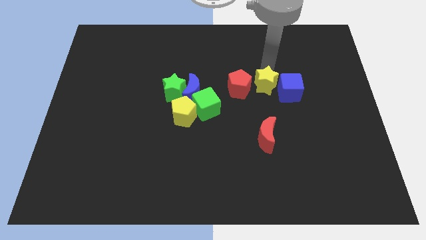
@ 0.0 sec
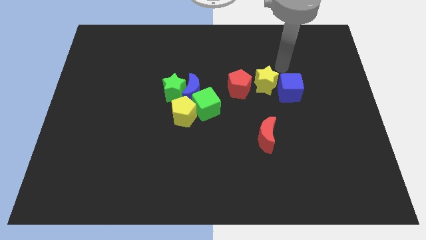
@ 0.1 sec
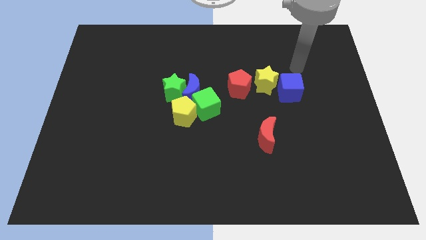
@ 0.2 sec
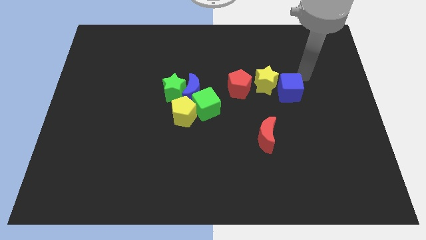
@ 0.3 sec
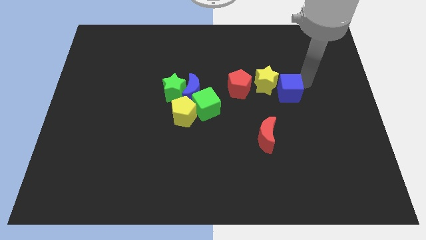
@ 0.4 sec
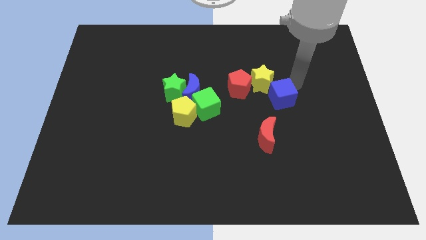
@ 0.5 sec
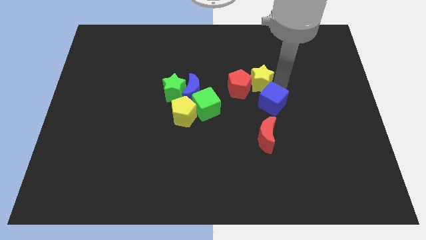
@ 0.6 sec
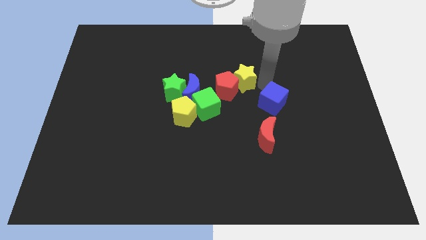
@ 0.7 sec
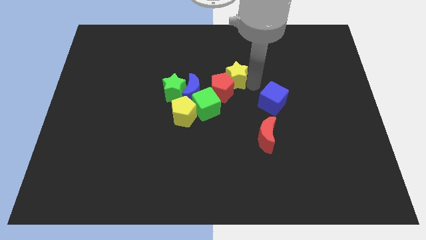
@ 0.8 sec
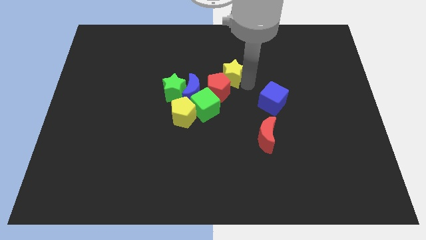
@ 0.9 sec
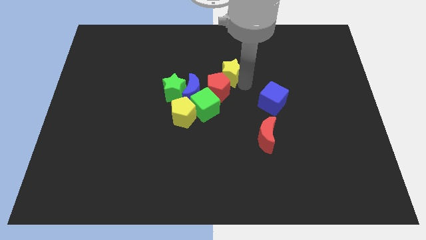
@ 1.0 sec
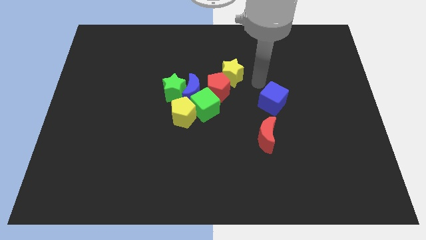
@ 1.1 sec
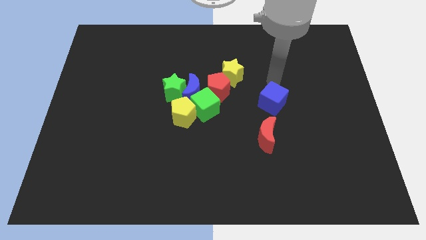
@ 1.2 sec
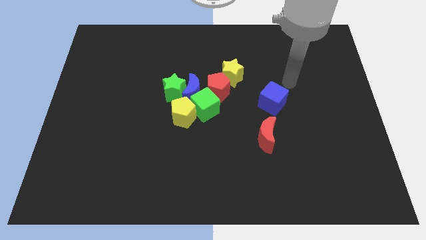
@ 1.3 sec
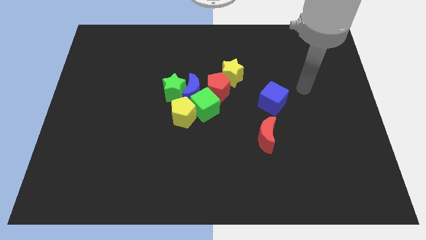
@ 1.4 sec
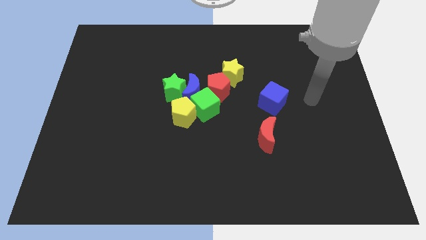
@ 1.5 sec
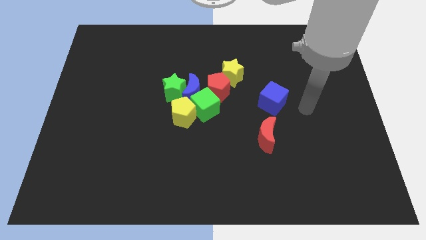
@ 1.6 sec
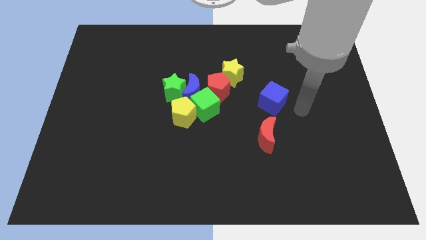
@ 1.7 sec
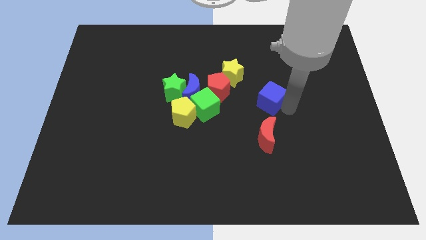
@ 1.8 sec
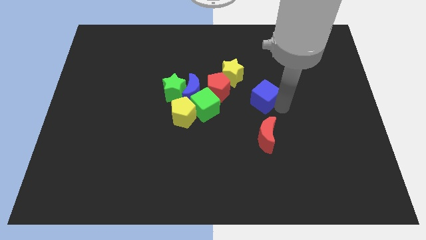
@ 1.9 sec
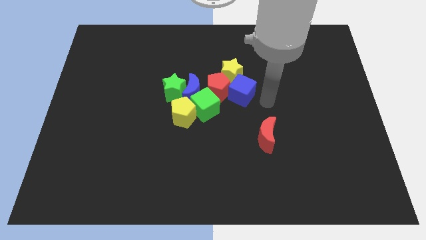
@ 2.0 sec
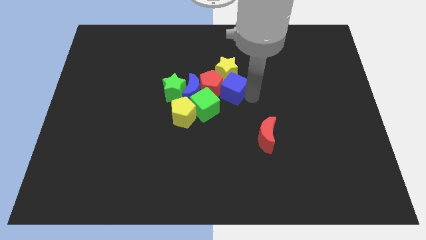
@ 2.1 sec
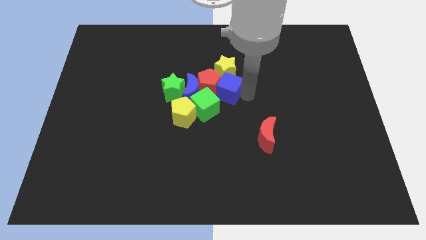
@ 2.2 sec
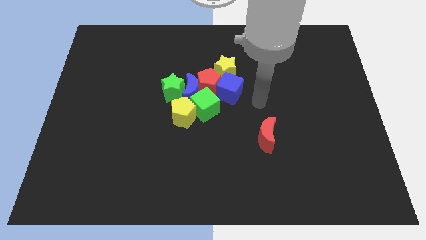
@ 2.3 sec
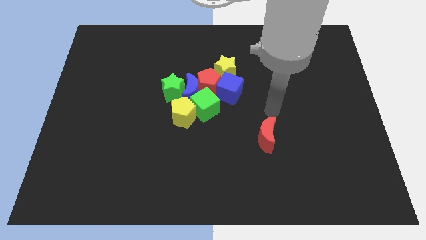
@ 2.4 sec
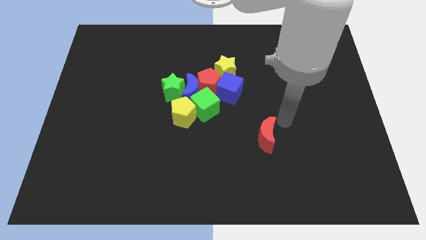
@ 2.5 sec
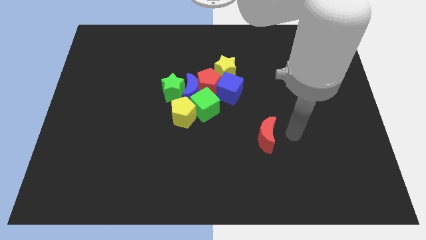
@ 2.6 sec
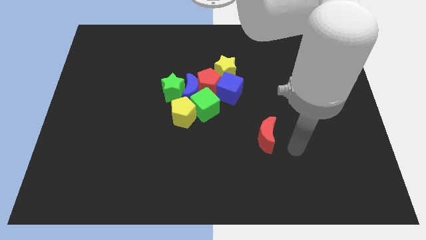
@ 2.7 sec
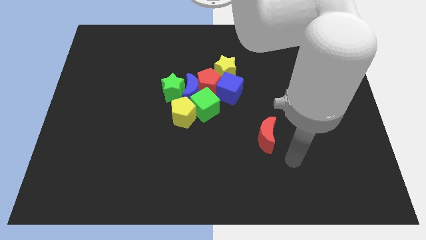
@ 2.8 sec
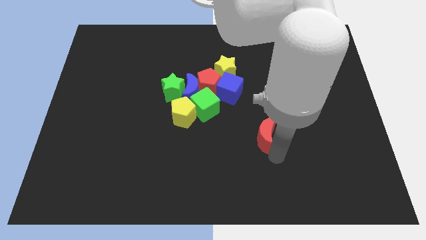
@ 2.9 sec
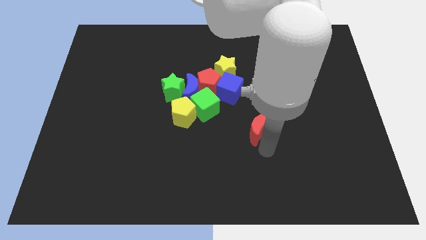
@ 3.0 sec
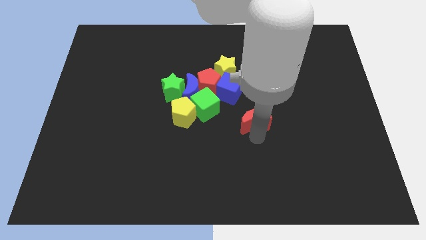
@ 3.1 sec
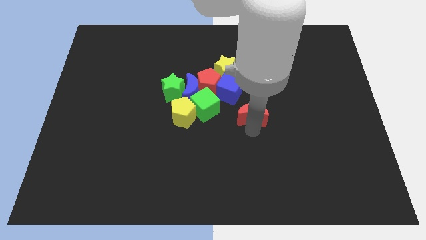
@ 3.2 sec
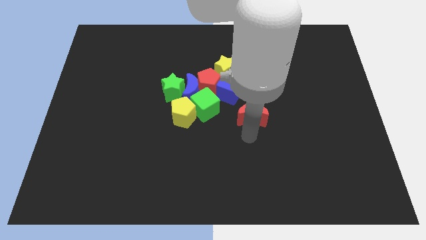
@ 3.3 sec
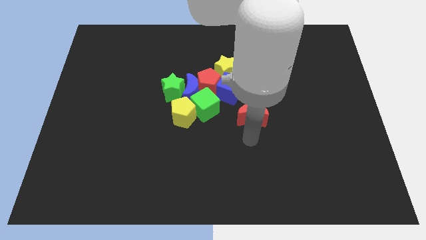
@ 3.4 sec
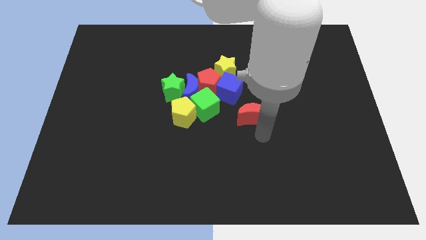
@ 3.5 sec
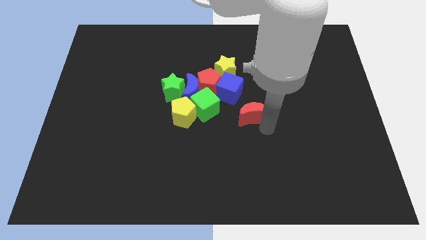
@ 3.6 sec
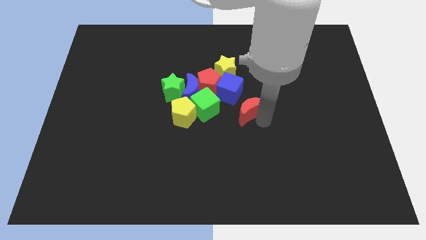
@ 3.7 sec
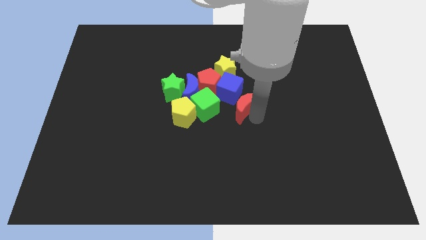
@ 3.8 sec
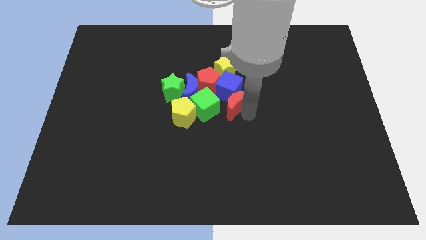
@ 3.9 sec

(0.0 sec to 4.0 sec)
place the yellow star blue cube and red crescent to center

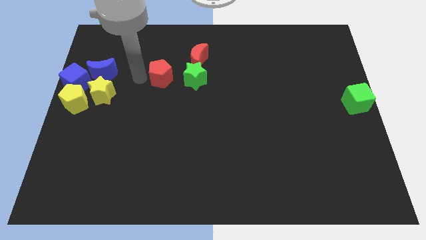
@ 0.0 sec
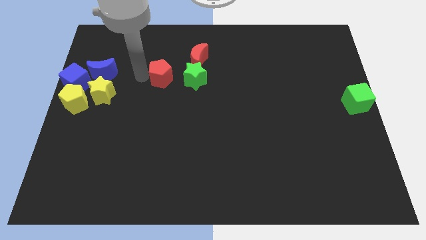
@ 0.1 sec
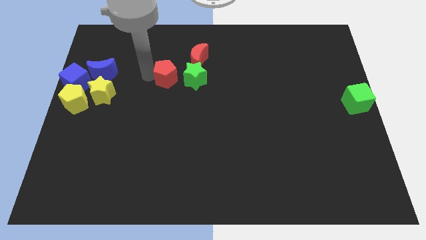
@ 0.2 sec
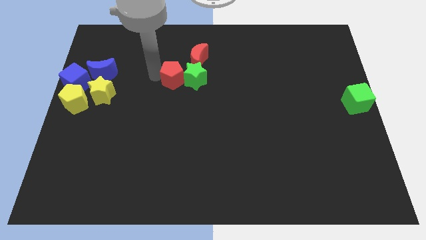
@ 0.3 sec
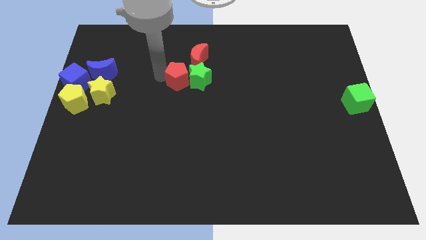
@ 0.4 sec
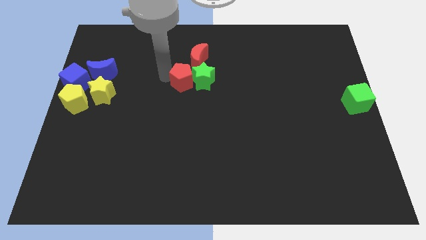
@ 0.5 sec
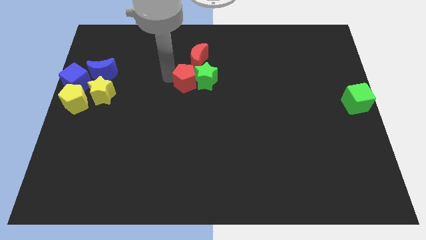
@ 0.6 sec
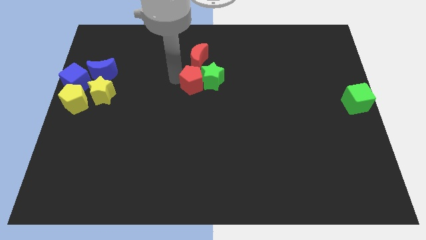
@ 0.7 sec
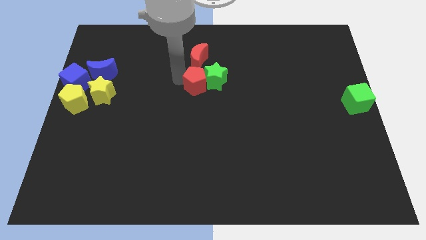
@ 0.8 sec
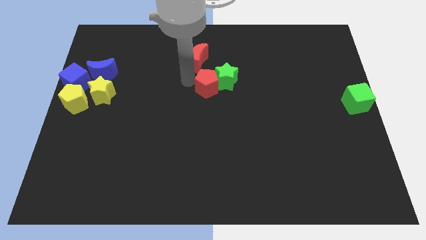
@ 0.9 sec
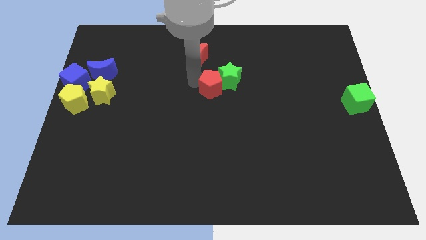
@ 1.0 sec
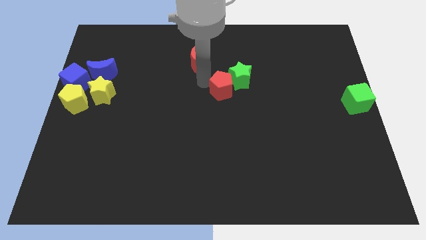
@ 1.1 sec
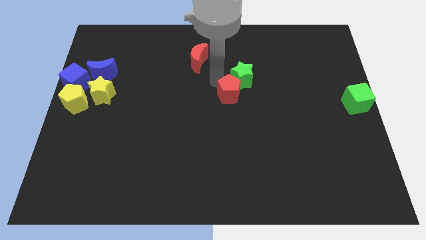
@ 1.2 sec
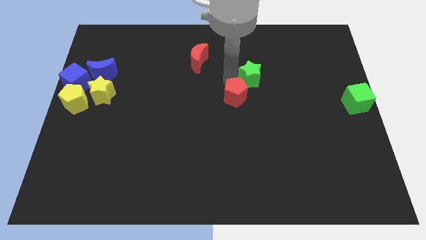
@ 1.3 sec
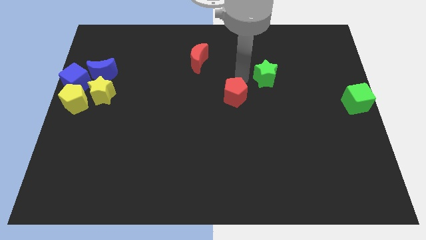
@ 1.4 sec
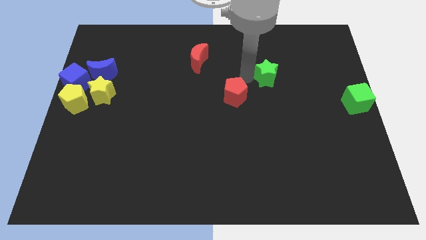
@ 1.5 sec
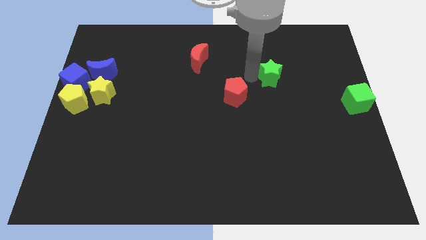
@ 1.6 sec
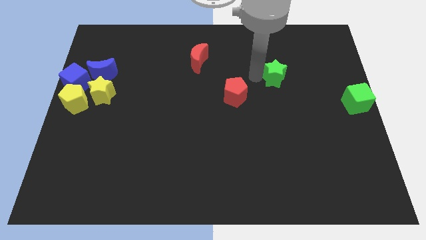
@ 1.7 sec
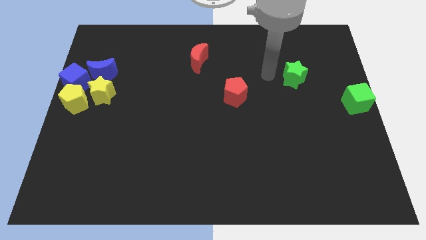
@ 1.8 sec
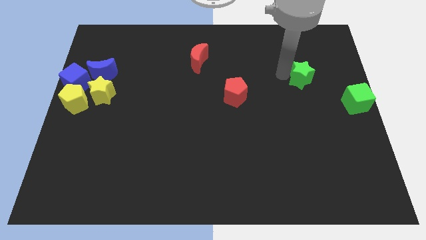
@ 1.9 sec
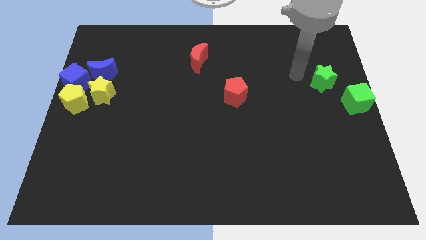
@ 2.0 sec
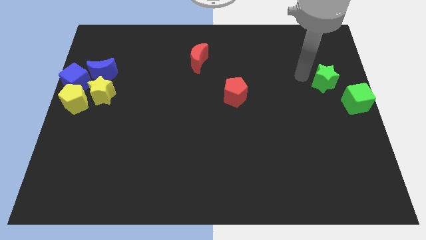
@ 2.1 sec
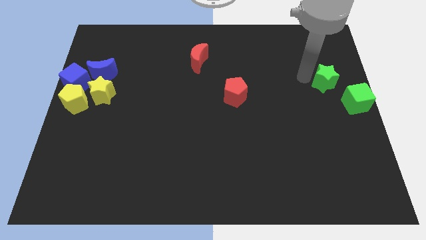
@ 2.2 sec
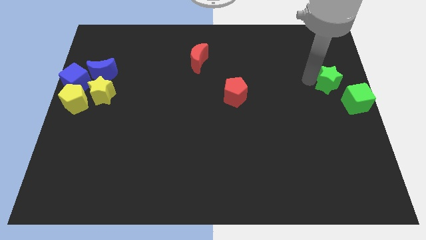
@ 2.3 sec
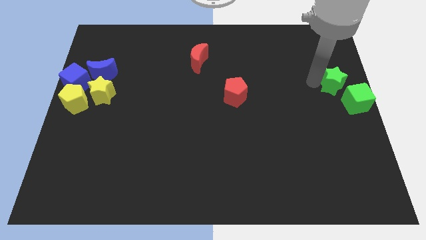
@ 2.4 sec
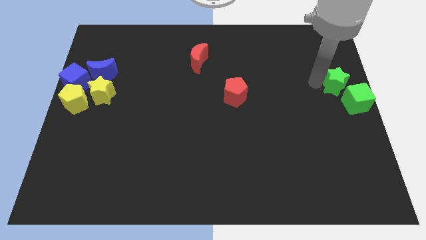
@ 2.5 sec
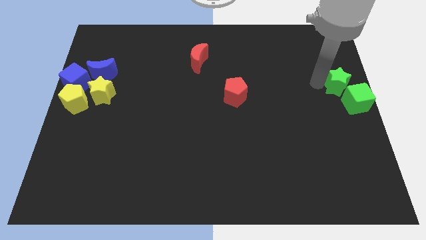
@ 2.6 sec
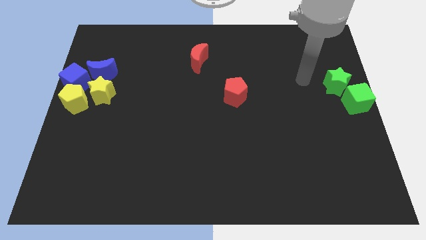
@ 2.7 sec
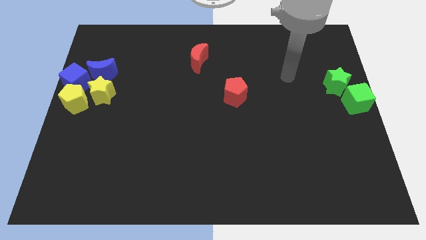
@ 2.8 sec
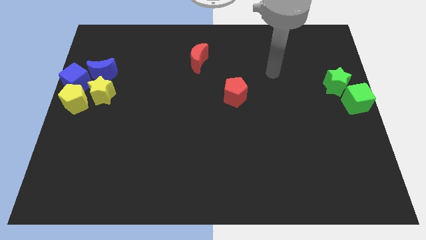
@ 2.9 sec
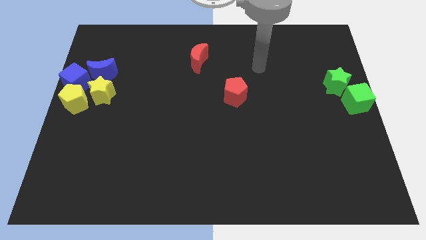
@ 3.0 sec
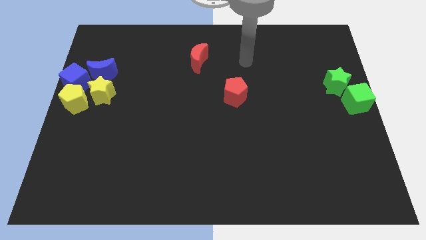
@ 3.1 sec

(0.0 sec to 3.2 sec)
push the green star to the top left of the green cube

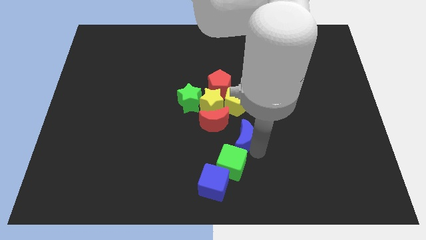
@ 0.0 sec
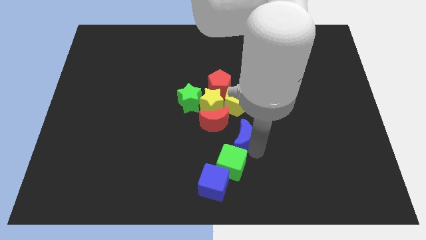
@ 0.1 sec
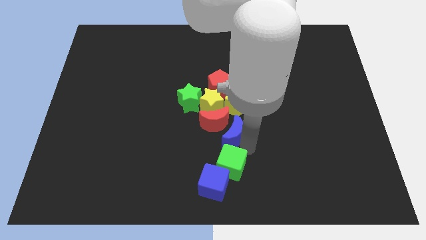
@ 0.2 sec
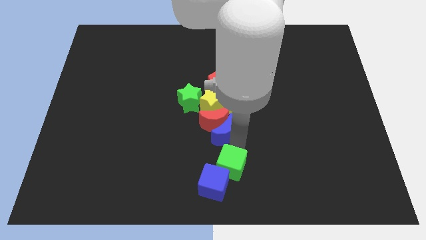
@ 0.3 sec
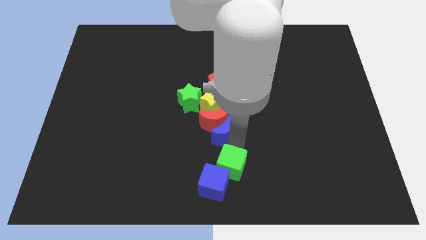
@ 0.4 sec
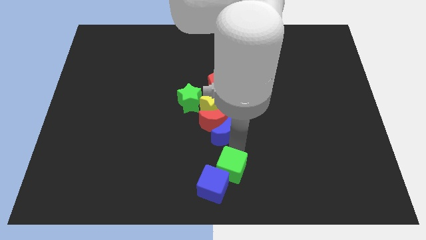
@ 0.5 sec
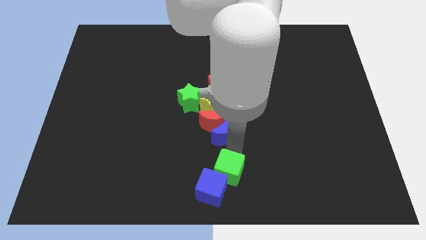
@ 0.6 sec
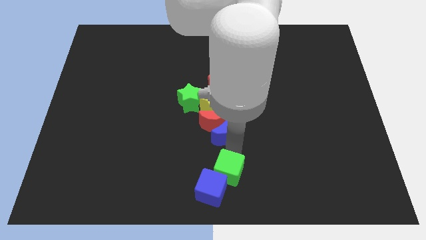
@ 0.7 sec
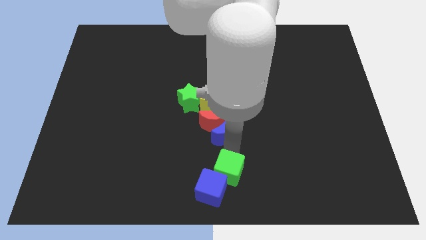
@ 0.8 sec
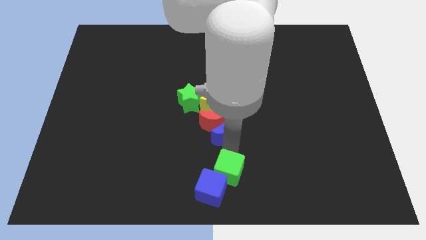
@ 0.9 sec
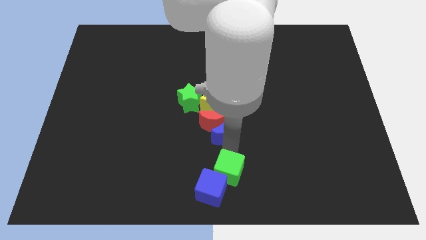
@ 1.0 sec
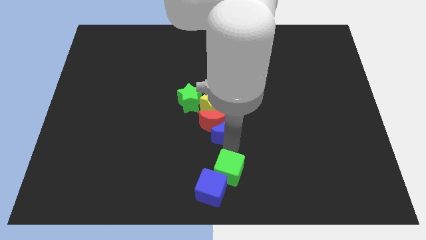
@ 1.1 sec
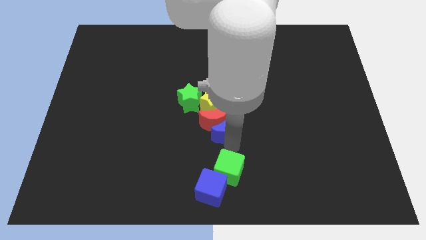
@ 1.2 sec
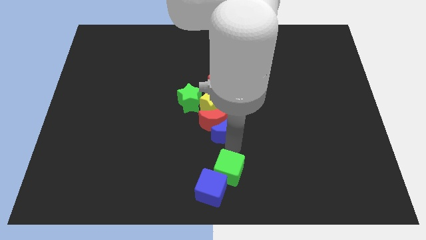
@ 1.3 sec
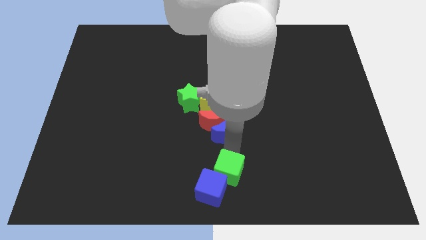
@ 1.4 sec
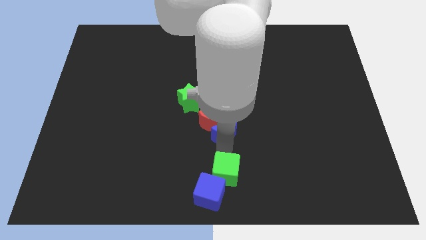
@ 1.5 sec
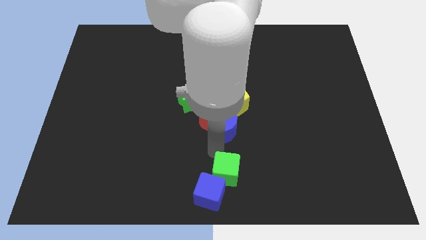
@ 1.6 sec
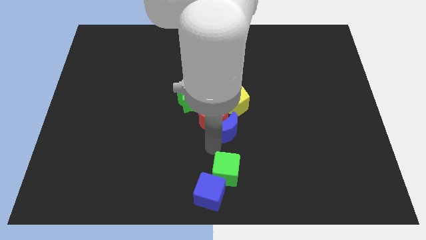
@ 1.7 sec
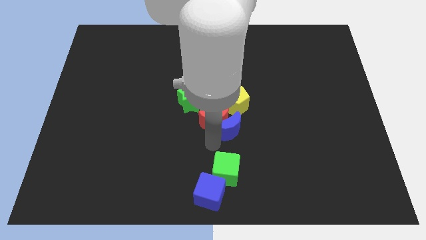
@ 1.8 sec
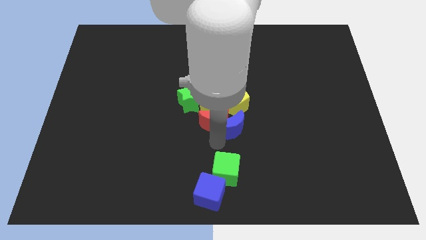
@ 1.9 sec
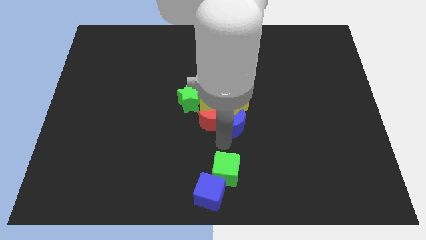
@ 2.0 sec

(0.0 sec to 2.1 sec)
separate the green and blue cubes from the blue crescent
